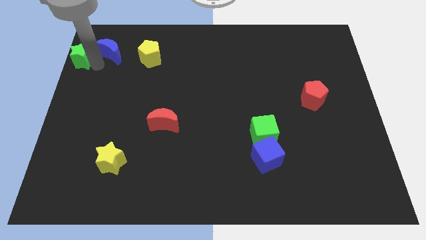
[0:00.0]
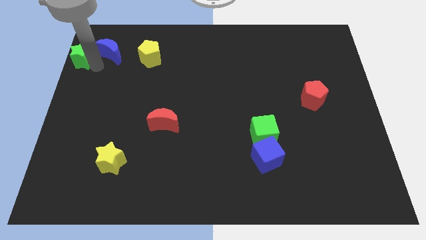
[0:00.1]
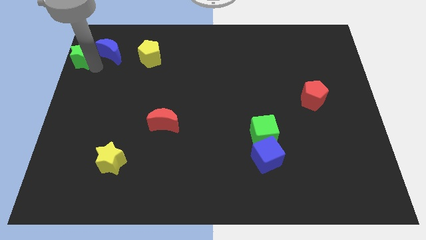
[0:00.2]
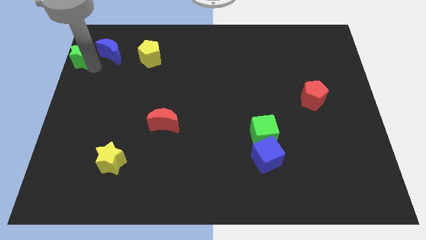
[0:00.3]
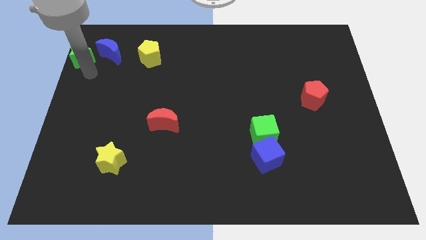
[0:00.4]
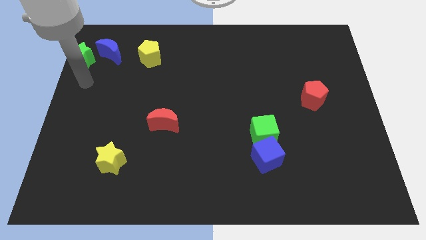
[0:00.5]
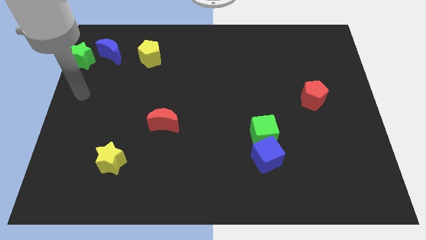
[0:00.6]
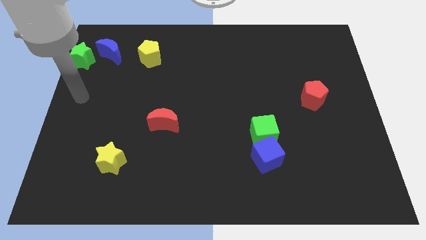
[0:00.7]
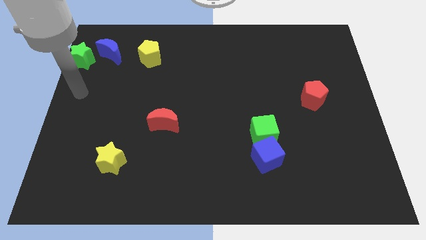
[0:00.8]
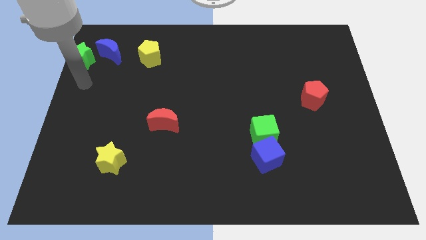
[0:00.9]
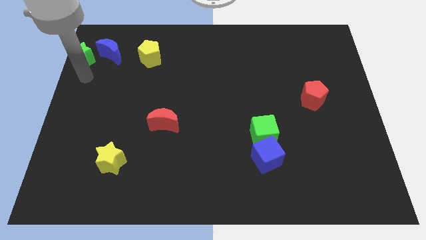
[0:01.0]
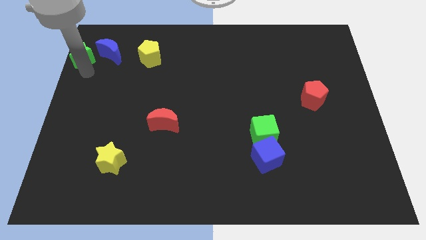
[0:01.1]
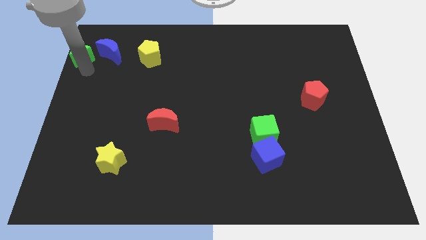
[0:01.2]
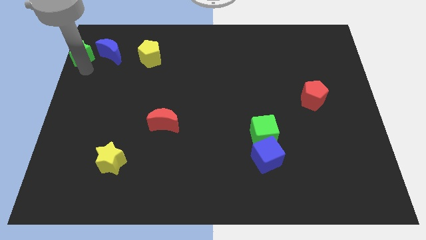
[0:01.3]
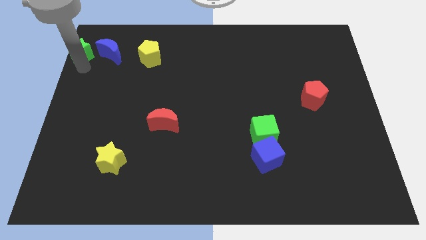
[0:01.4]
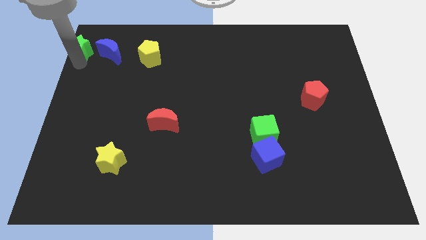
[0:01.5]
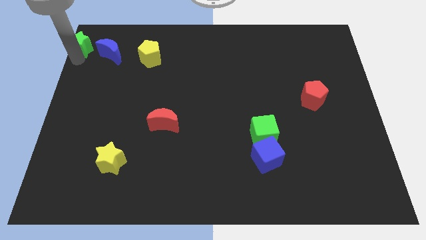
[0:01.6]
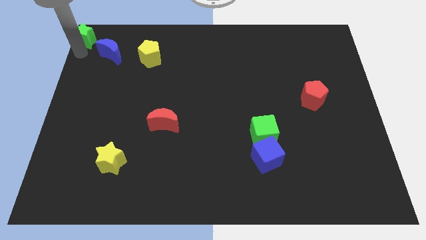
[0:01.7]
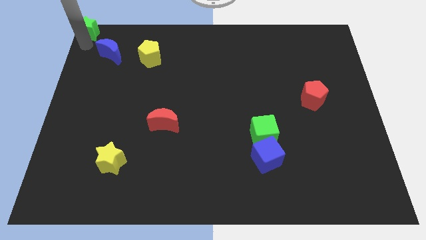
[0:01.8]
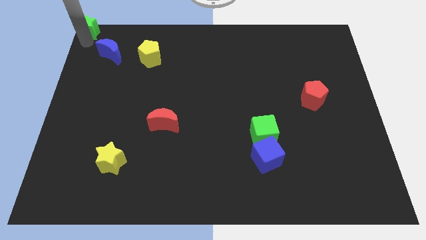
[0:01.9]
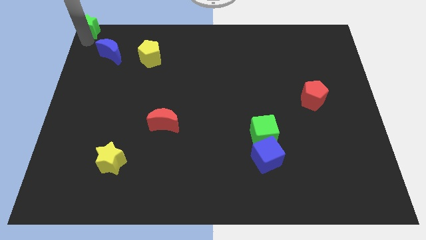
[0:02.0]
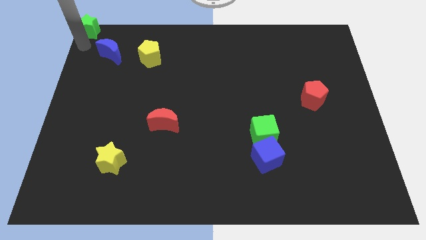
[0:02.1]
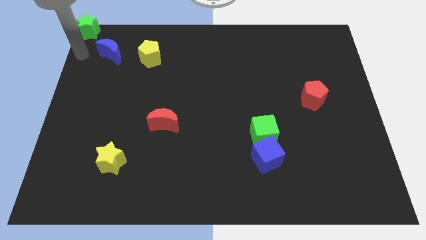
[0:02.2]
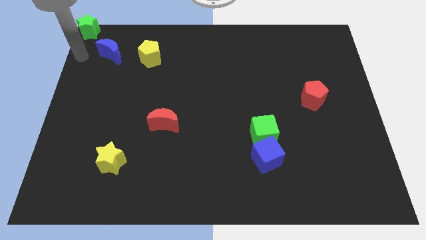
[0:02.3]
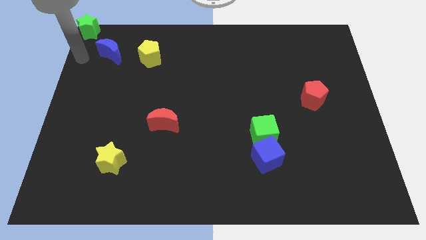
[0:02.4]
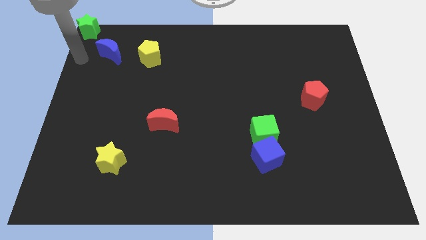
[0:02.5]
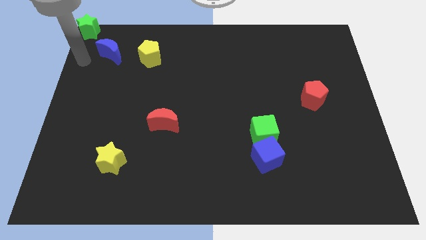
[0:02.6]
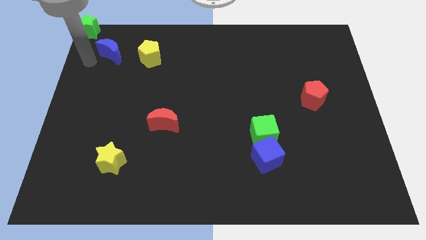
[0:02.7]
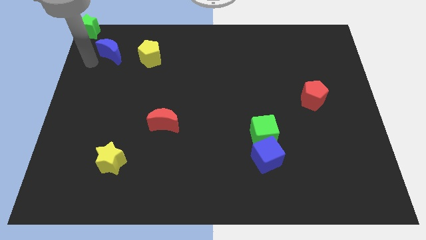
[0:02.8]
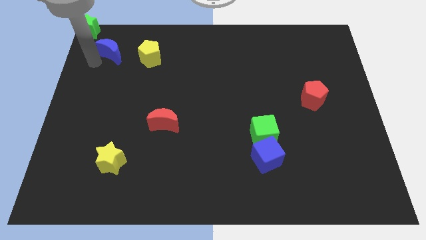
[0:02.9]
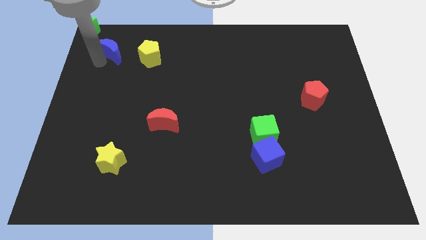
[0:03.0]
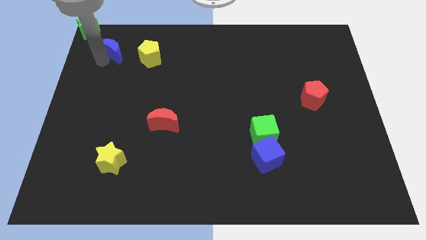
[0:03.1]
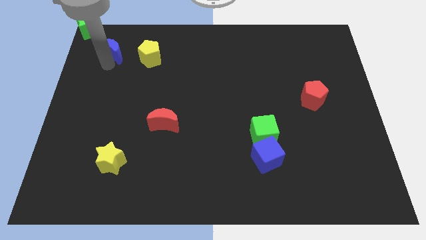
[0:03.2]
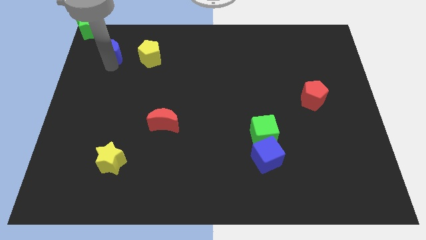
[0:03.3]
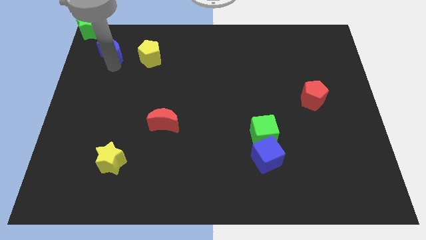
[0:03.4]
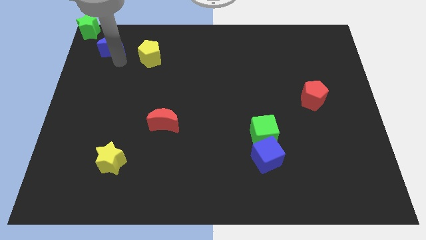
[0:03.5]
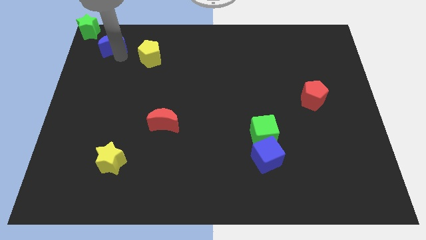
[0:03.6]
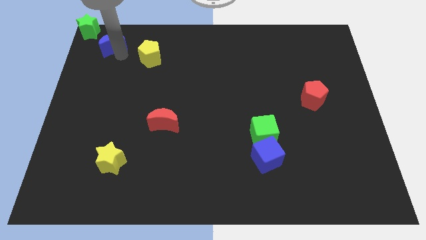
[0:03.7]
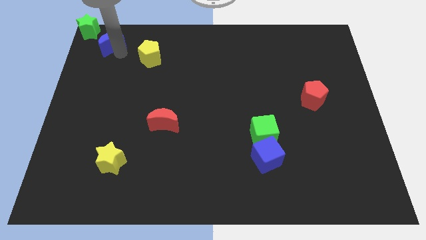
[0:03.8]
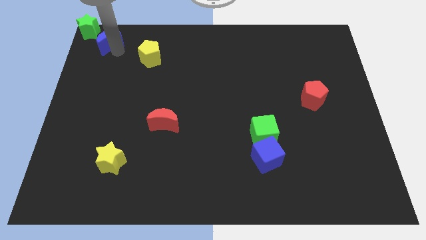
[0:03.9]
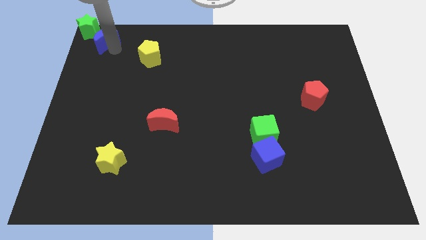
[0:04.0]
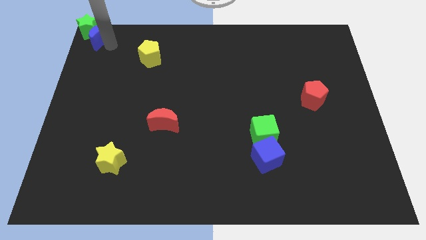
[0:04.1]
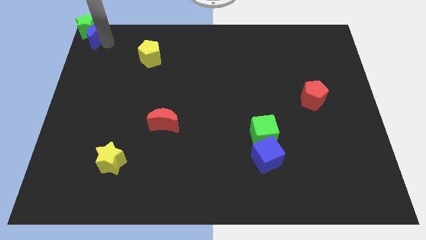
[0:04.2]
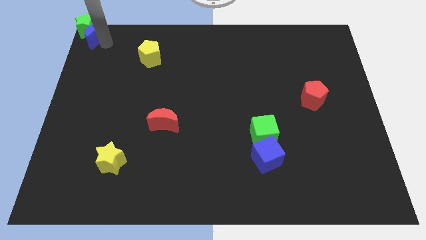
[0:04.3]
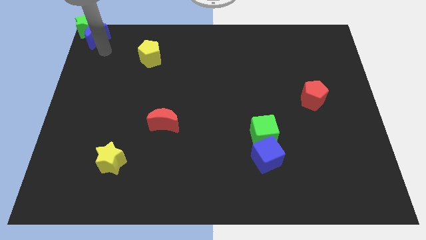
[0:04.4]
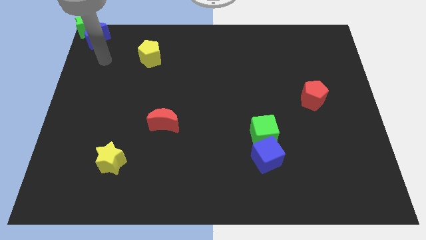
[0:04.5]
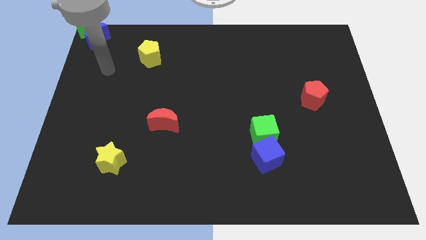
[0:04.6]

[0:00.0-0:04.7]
push the green star and blue crescent at the top left corner of the board

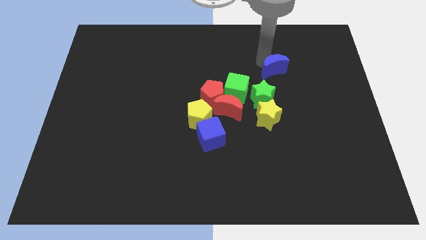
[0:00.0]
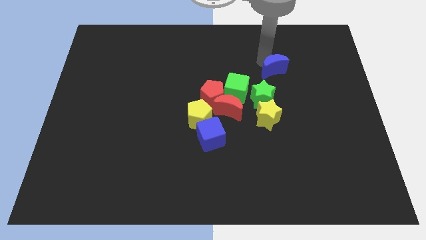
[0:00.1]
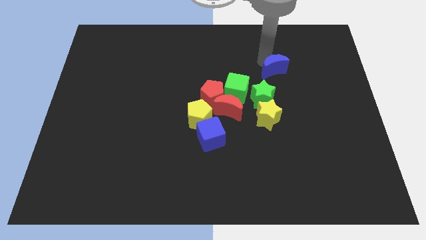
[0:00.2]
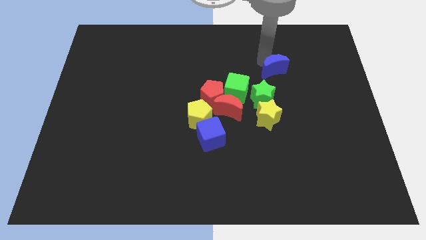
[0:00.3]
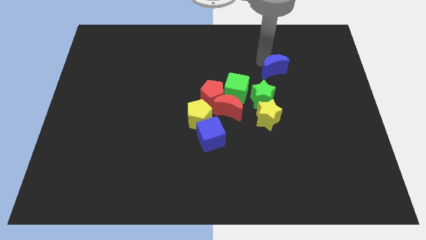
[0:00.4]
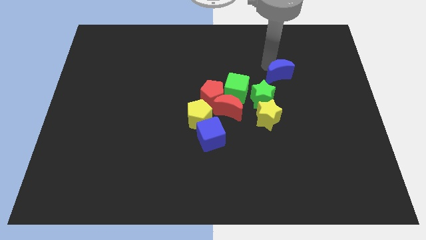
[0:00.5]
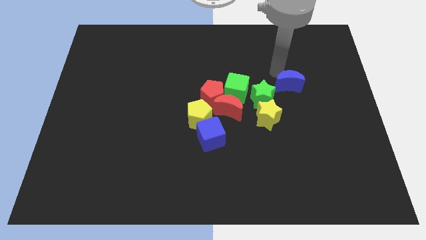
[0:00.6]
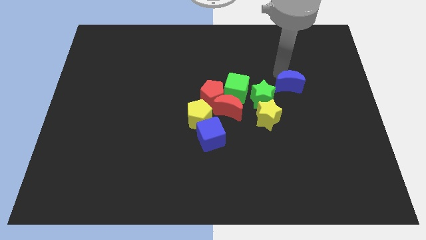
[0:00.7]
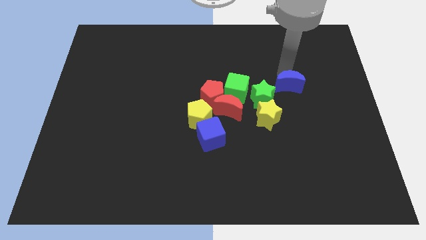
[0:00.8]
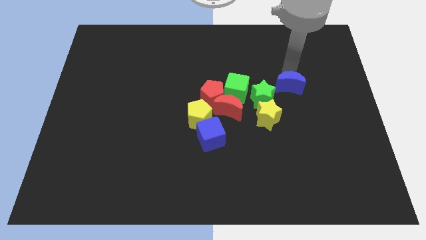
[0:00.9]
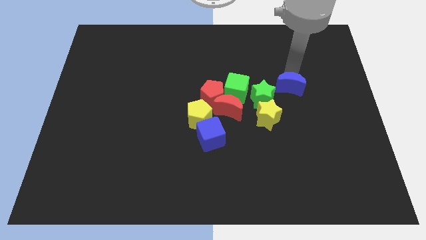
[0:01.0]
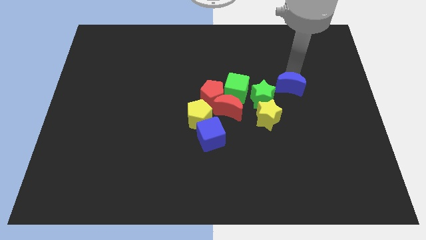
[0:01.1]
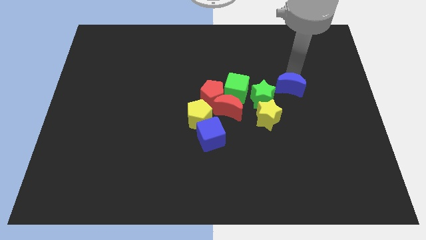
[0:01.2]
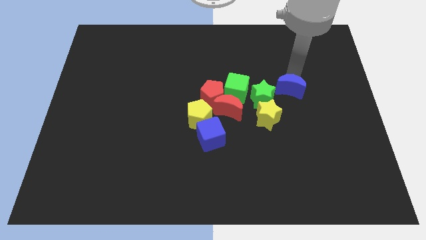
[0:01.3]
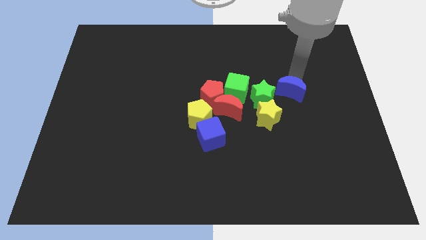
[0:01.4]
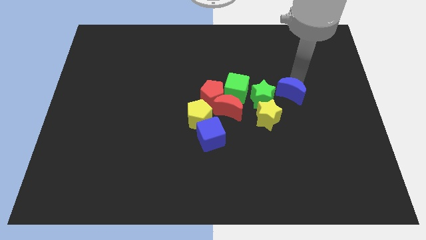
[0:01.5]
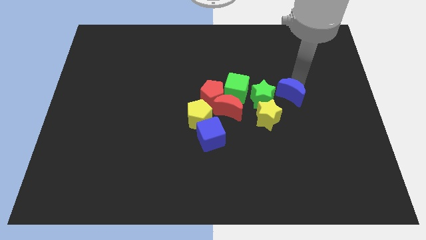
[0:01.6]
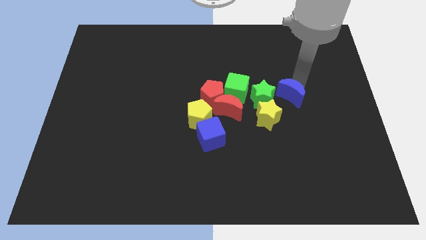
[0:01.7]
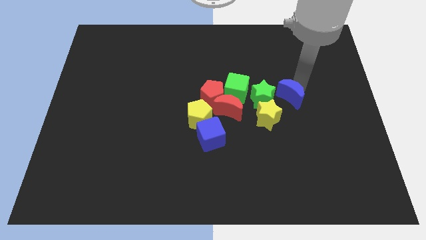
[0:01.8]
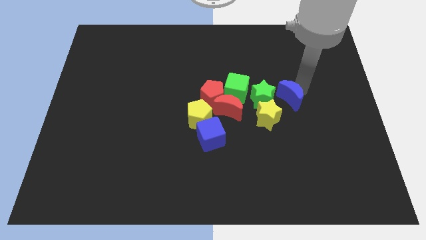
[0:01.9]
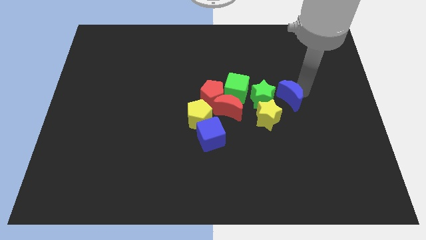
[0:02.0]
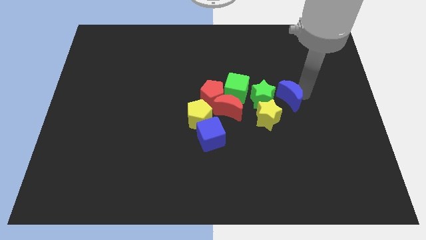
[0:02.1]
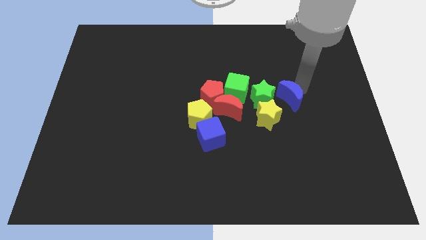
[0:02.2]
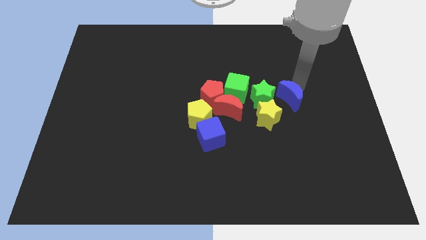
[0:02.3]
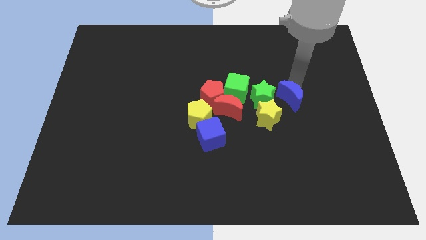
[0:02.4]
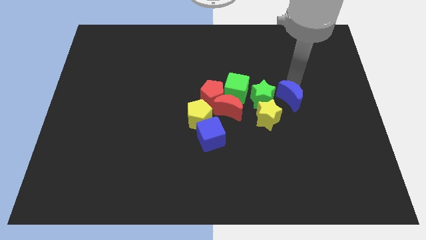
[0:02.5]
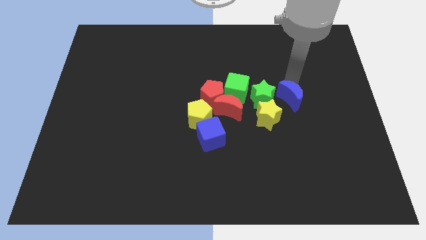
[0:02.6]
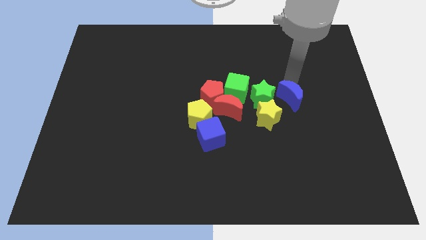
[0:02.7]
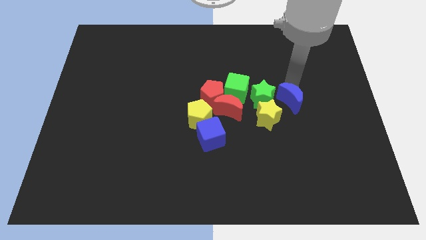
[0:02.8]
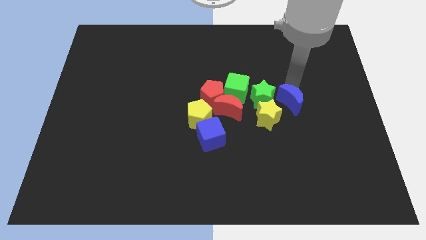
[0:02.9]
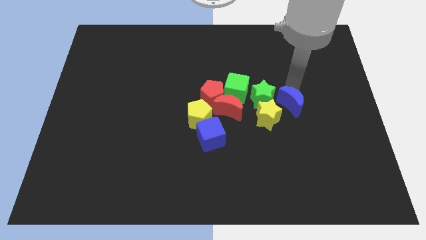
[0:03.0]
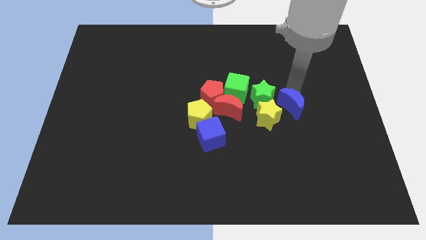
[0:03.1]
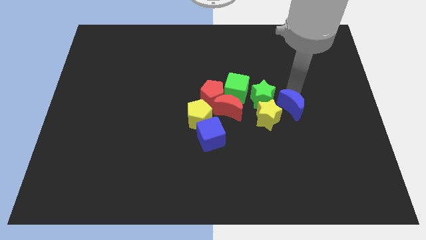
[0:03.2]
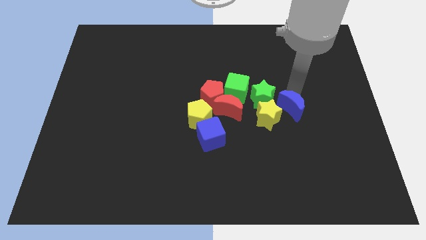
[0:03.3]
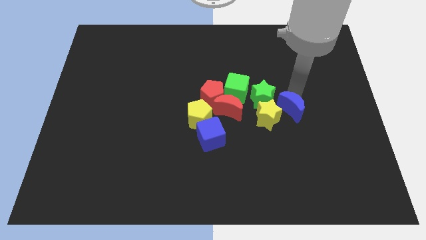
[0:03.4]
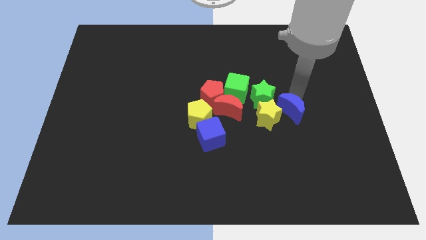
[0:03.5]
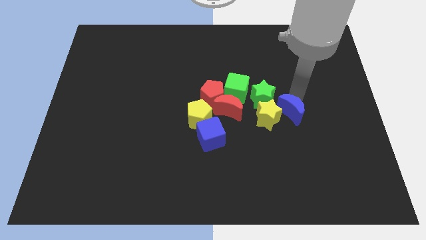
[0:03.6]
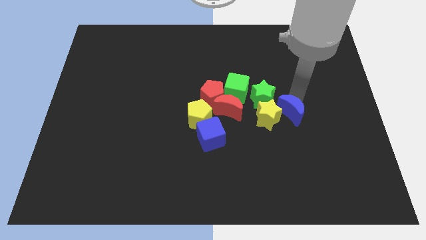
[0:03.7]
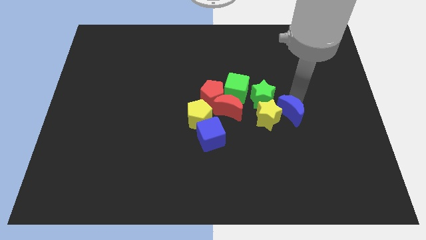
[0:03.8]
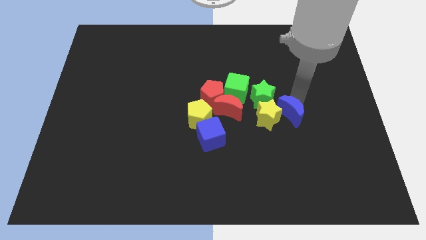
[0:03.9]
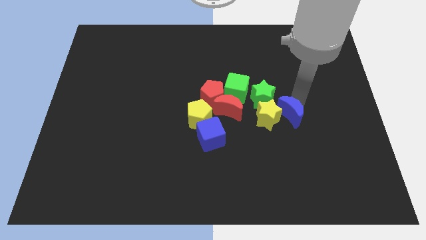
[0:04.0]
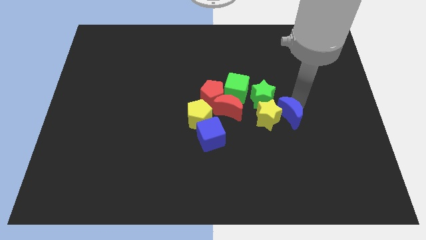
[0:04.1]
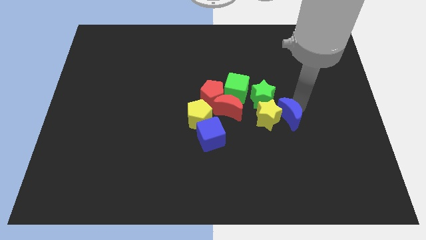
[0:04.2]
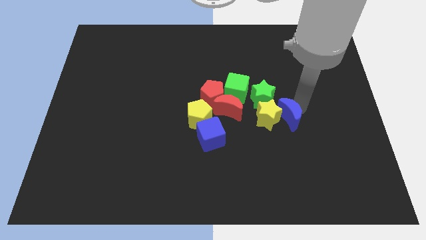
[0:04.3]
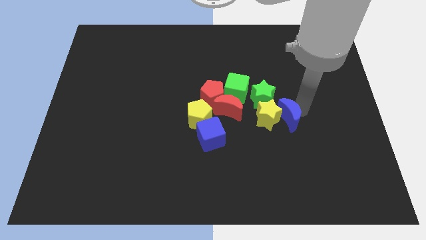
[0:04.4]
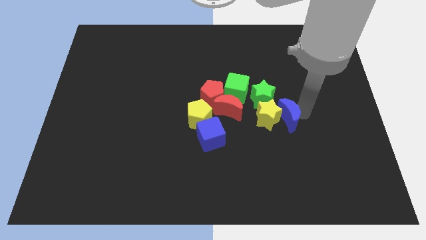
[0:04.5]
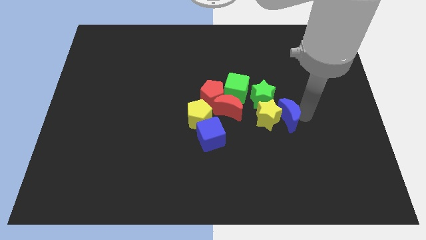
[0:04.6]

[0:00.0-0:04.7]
move the blue crescent close to the right side of the yellow star
